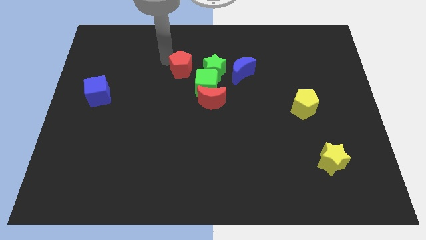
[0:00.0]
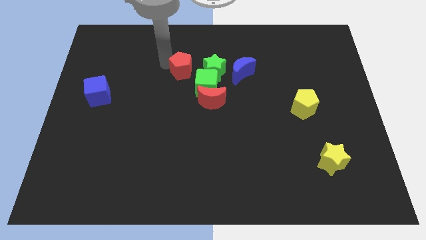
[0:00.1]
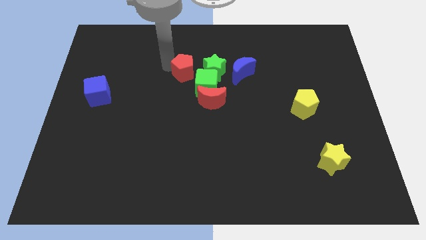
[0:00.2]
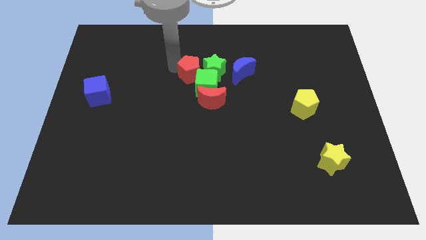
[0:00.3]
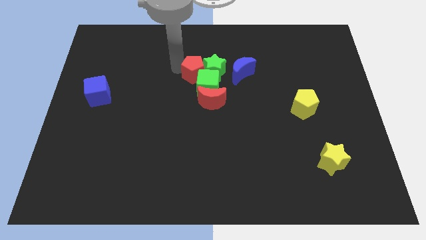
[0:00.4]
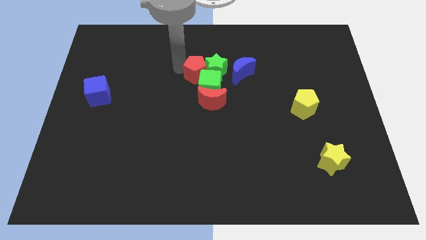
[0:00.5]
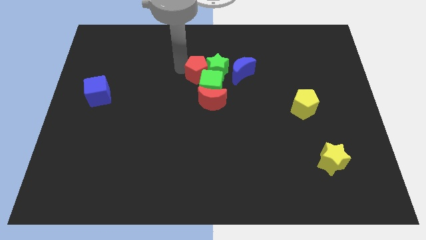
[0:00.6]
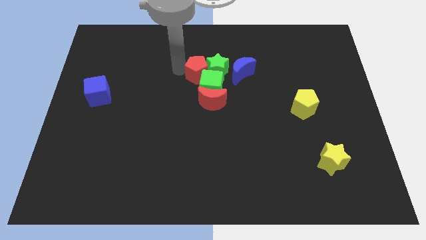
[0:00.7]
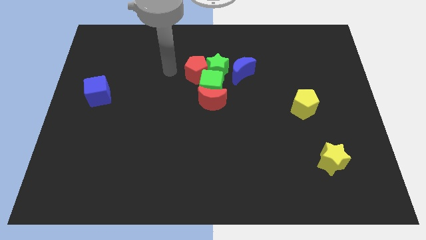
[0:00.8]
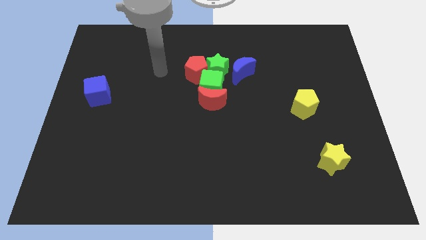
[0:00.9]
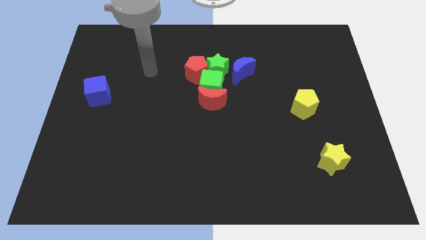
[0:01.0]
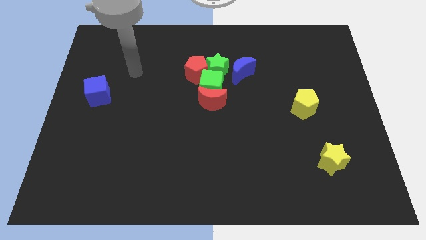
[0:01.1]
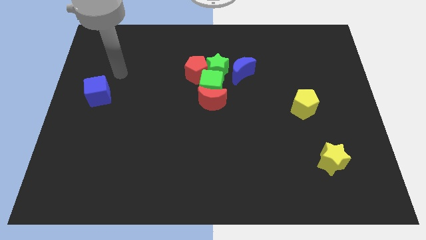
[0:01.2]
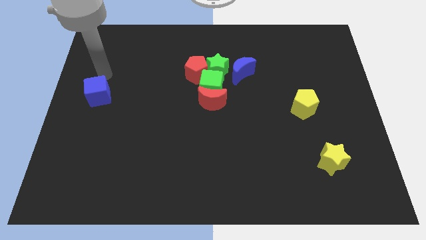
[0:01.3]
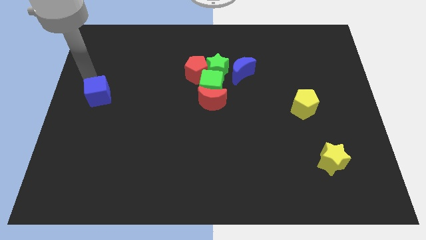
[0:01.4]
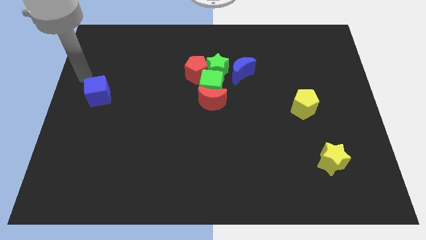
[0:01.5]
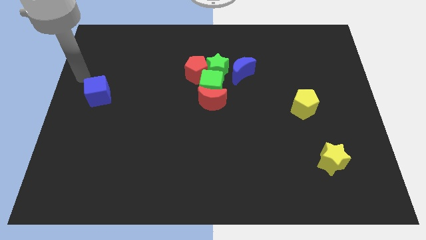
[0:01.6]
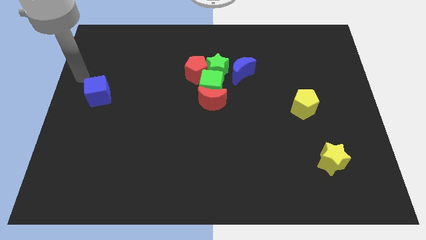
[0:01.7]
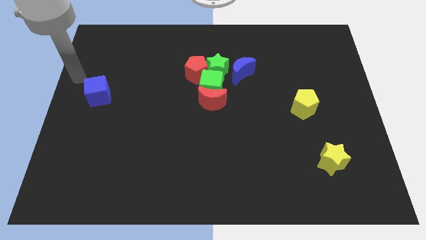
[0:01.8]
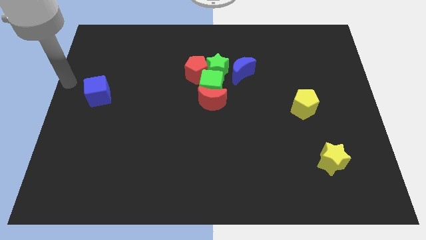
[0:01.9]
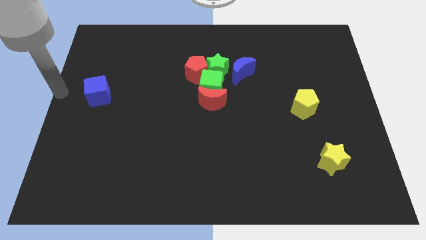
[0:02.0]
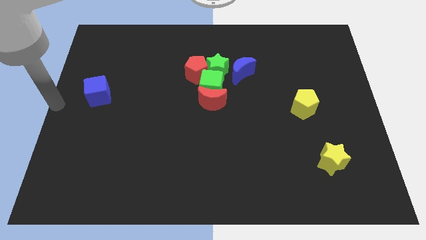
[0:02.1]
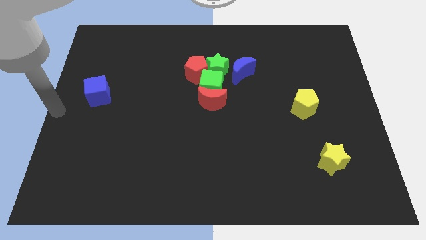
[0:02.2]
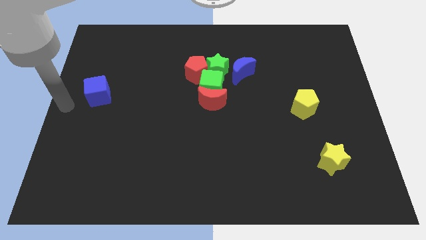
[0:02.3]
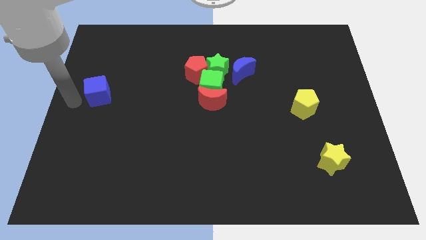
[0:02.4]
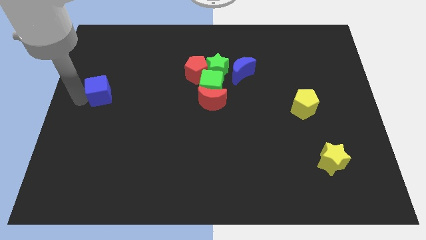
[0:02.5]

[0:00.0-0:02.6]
place the arm to the left of the blue cube

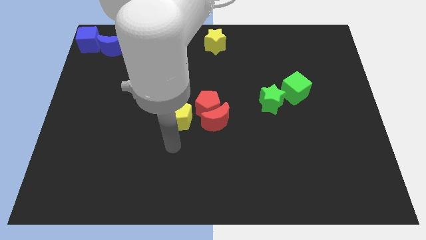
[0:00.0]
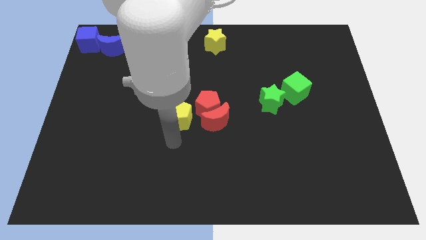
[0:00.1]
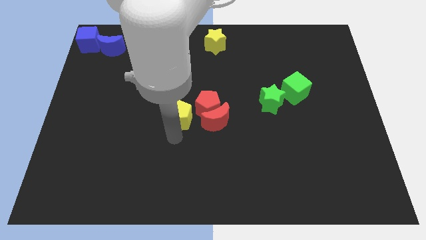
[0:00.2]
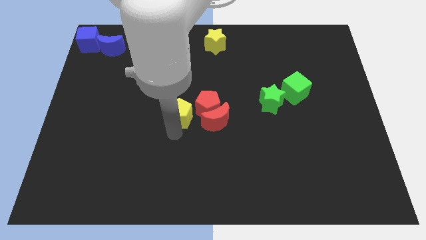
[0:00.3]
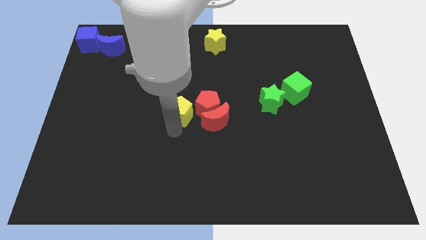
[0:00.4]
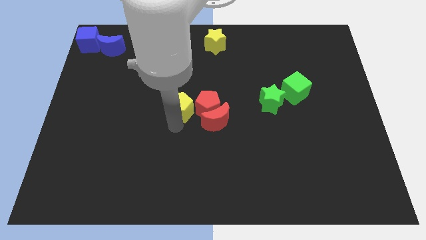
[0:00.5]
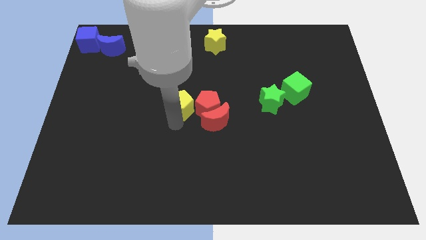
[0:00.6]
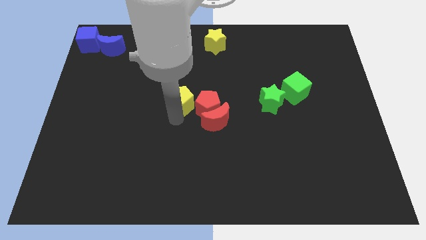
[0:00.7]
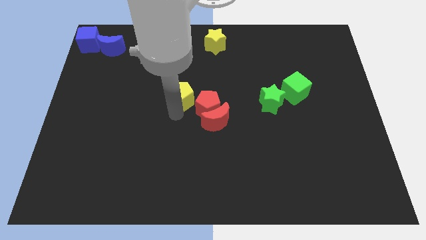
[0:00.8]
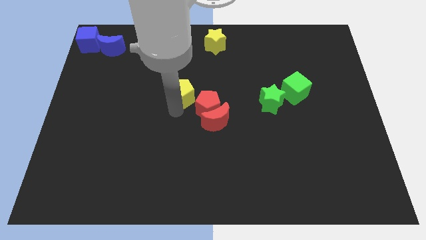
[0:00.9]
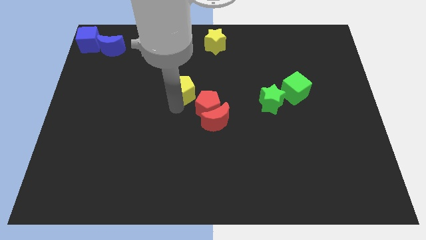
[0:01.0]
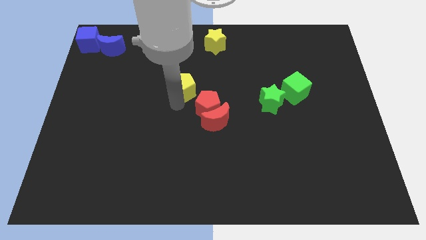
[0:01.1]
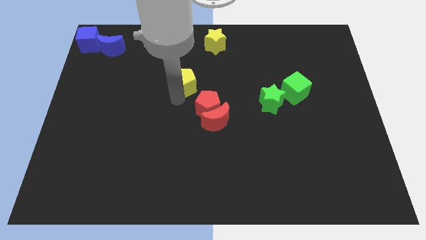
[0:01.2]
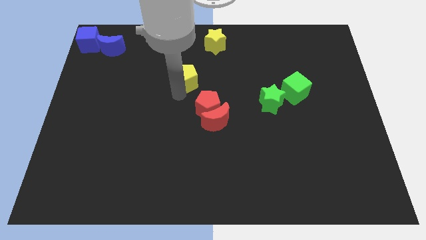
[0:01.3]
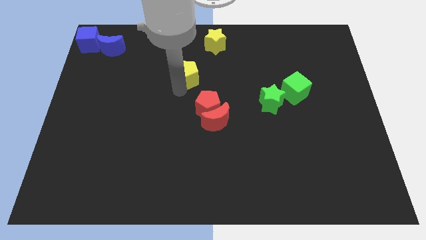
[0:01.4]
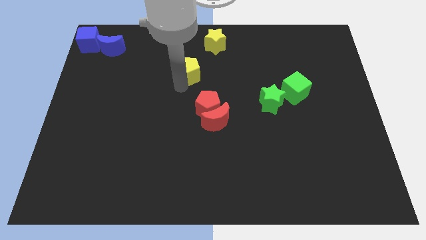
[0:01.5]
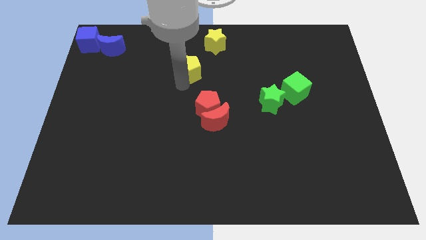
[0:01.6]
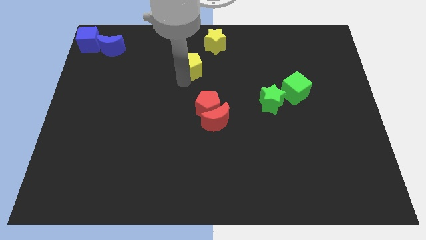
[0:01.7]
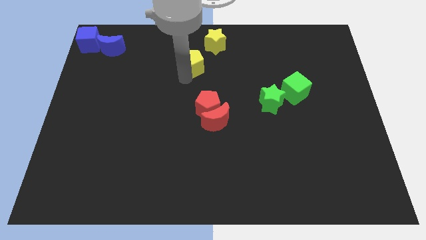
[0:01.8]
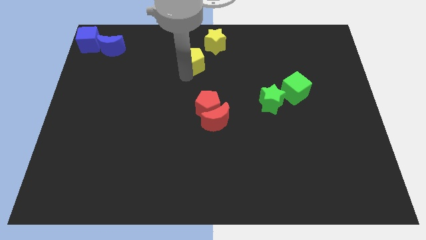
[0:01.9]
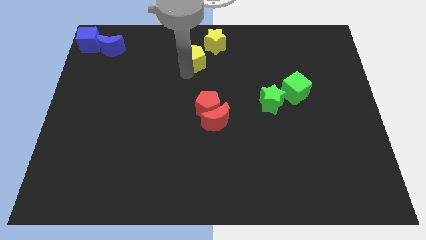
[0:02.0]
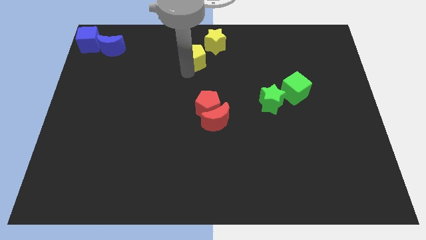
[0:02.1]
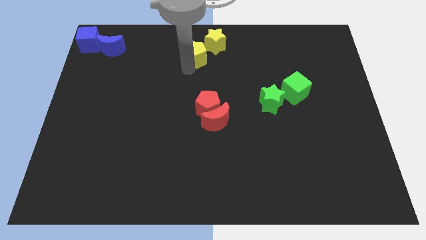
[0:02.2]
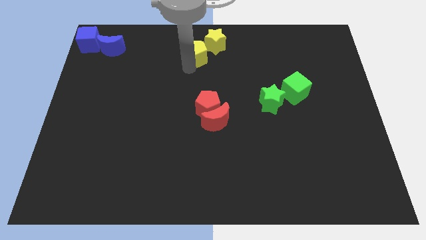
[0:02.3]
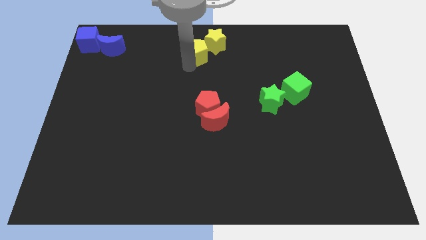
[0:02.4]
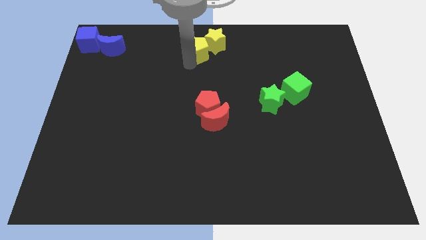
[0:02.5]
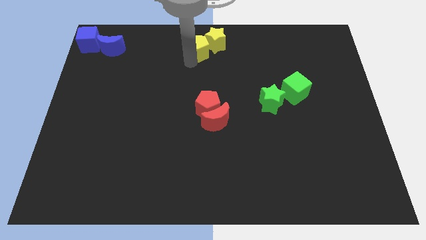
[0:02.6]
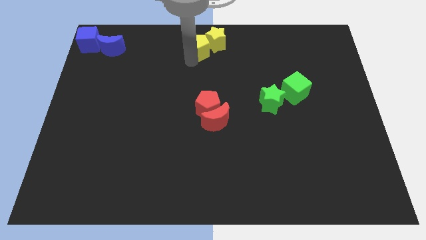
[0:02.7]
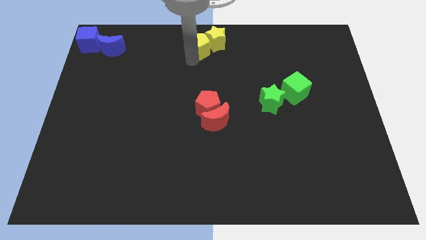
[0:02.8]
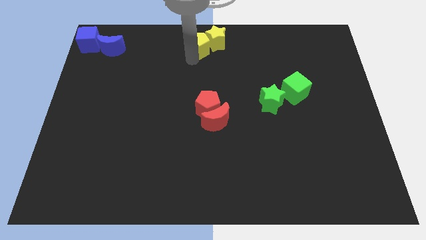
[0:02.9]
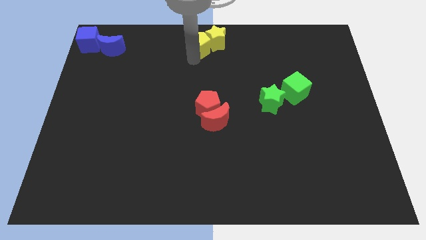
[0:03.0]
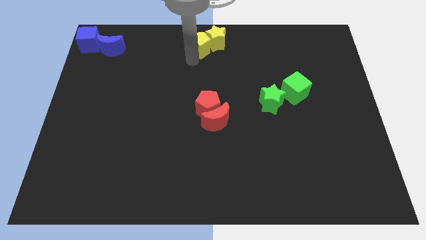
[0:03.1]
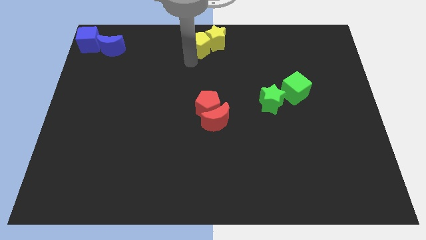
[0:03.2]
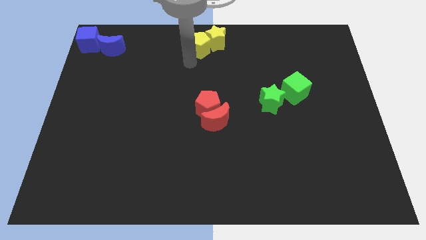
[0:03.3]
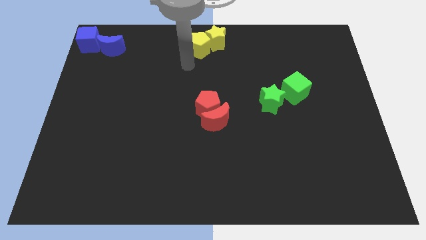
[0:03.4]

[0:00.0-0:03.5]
push the yellow pentagon into the yellow star

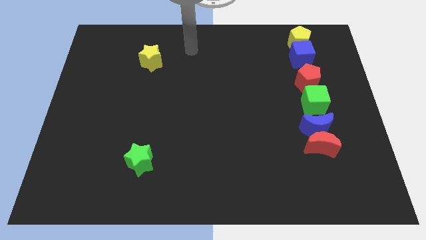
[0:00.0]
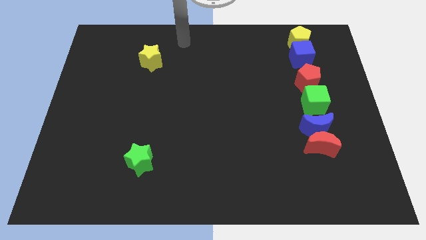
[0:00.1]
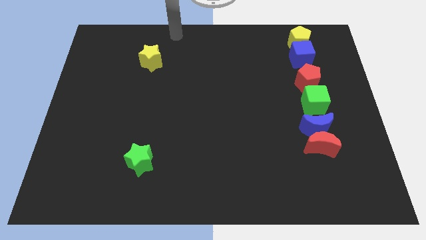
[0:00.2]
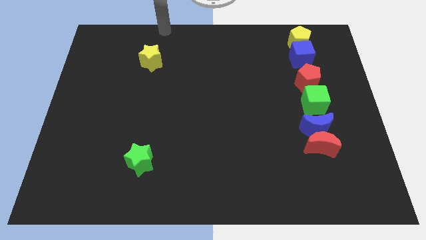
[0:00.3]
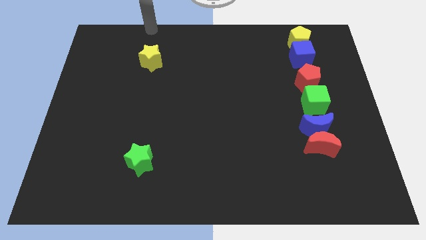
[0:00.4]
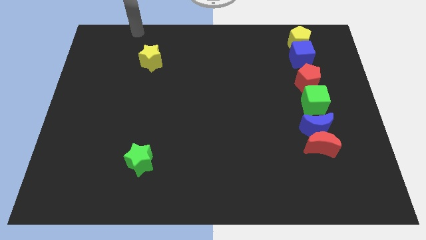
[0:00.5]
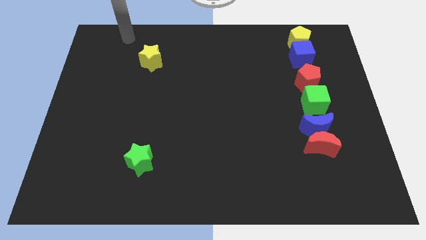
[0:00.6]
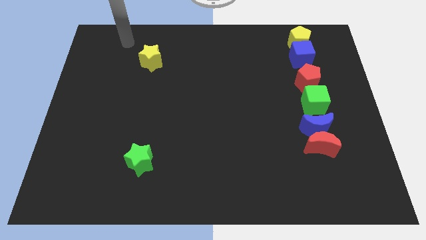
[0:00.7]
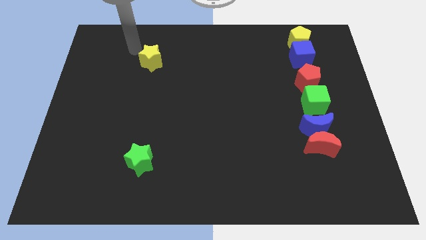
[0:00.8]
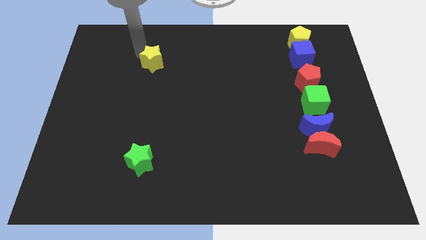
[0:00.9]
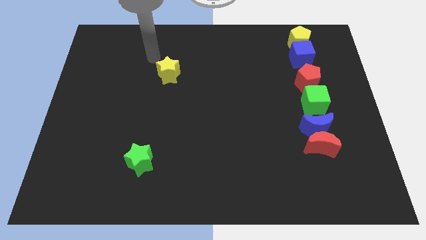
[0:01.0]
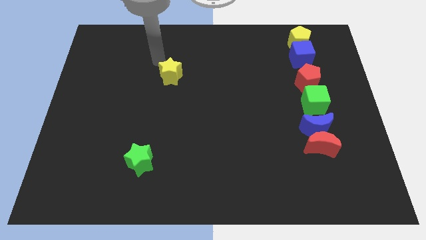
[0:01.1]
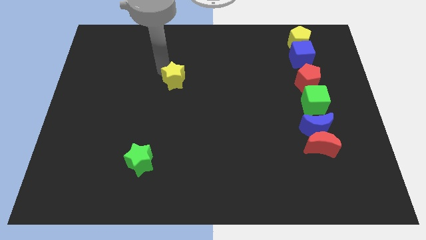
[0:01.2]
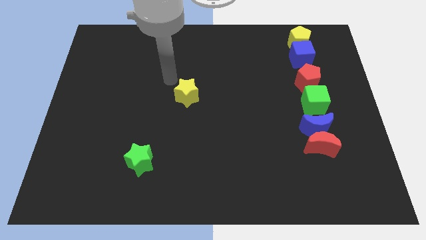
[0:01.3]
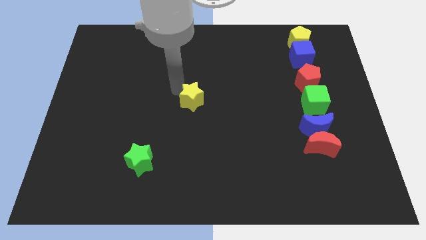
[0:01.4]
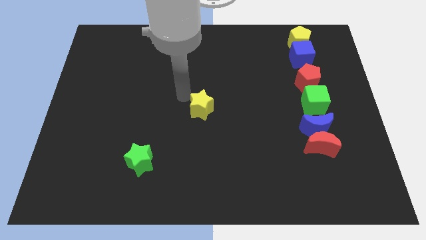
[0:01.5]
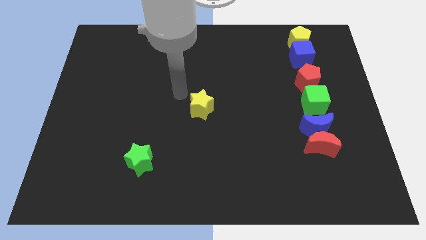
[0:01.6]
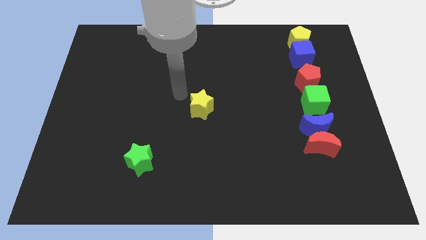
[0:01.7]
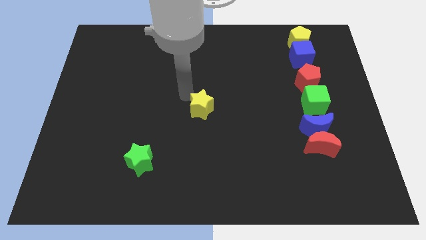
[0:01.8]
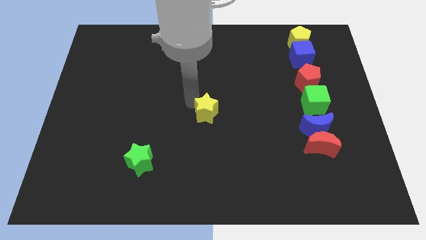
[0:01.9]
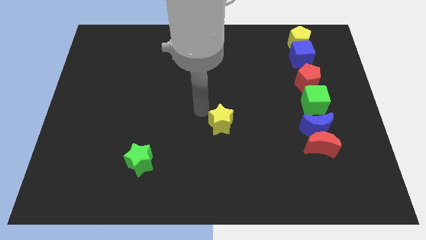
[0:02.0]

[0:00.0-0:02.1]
move the yellow star to the center of the board

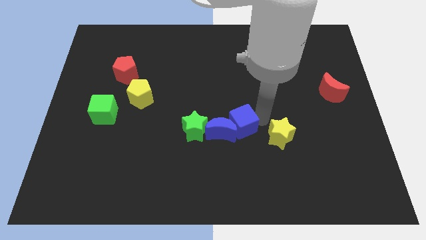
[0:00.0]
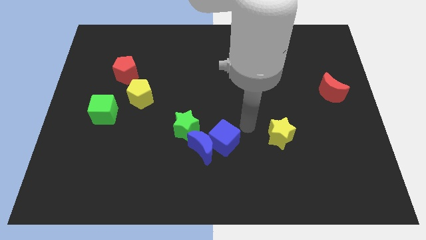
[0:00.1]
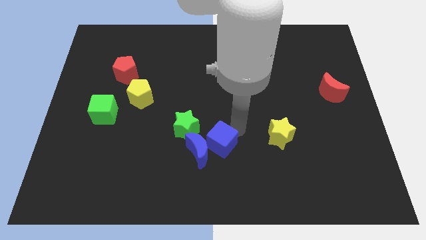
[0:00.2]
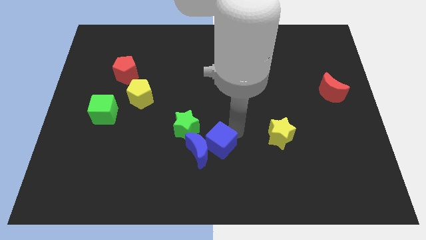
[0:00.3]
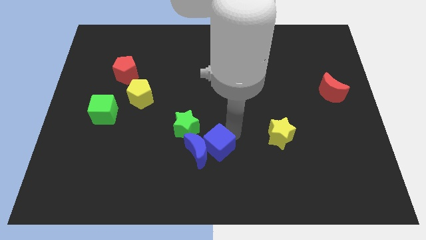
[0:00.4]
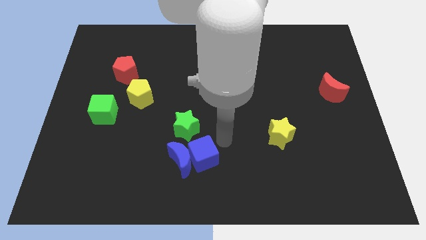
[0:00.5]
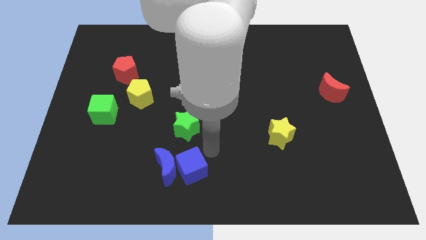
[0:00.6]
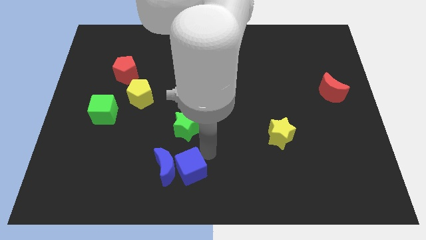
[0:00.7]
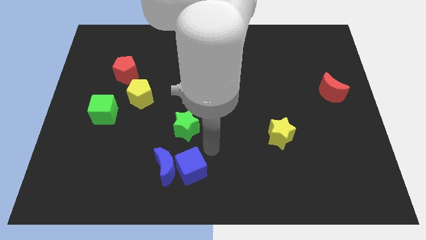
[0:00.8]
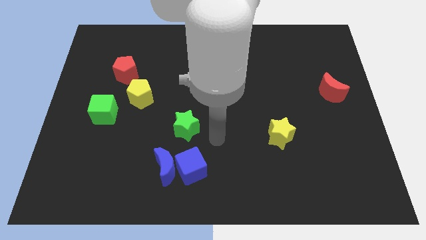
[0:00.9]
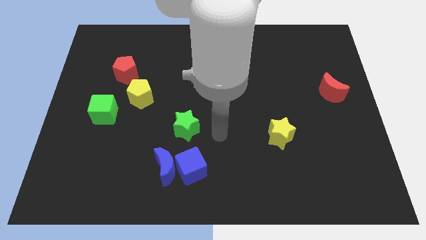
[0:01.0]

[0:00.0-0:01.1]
push blue blocks towards down
